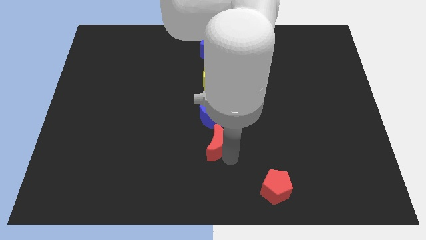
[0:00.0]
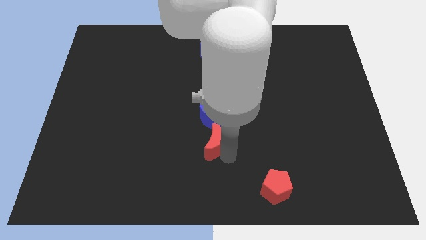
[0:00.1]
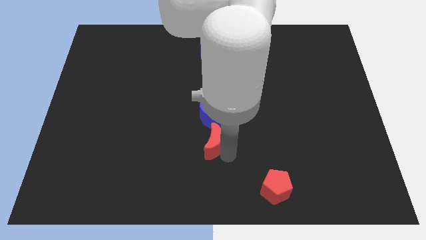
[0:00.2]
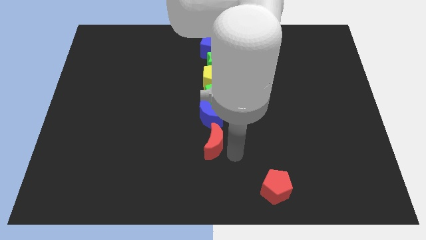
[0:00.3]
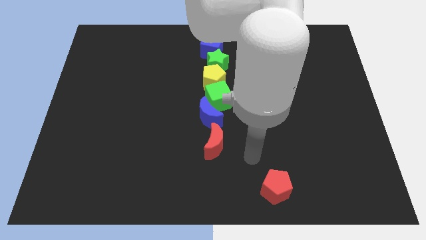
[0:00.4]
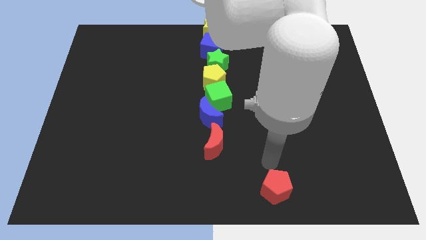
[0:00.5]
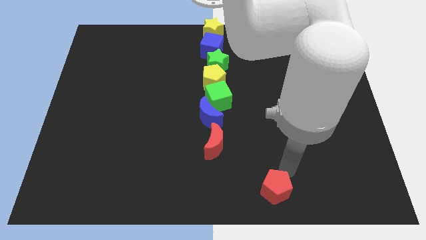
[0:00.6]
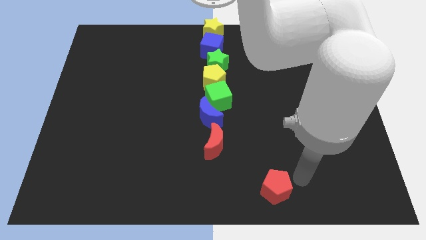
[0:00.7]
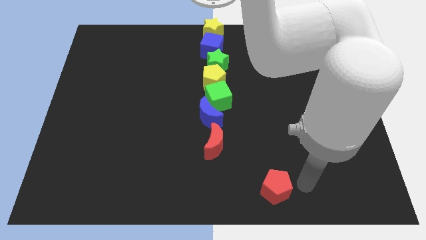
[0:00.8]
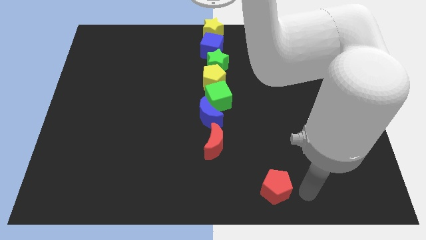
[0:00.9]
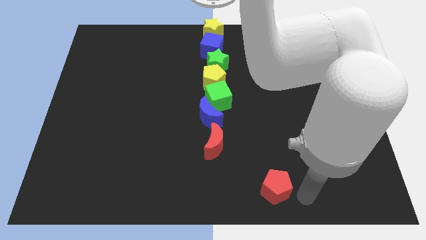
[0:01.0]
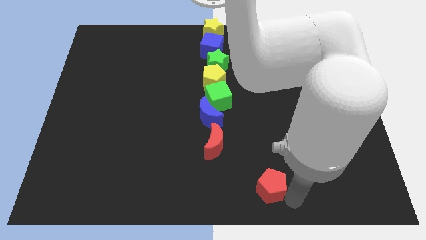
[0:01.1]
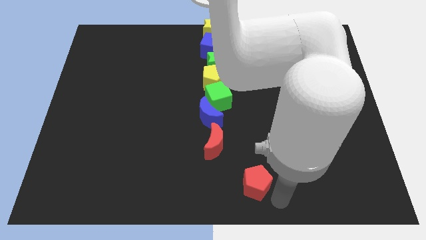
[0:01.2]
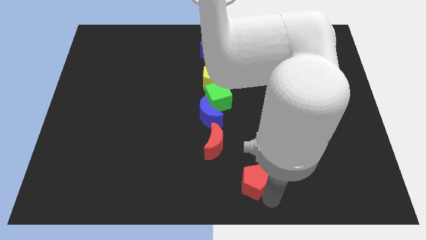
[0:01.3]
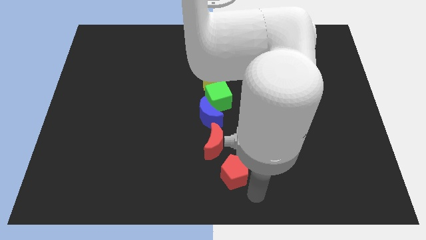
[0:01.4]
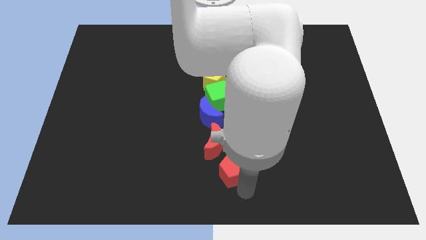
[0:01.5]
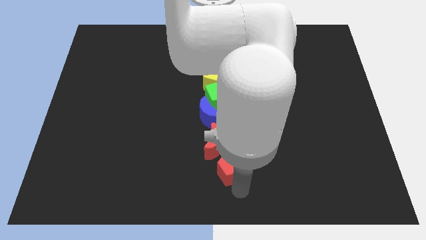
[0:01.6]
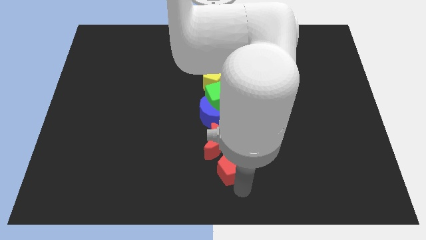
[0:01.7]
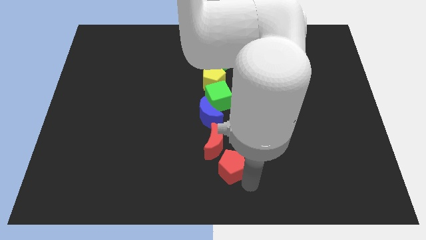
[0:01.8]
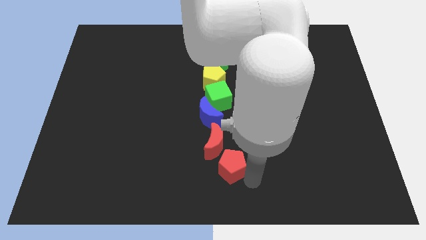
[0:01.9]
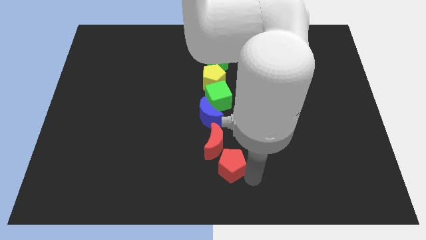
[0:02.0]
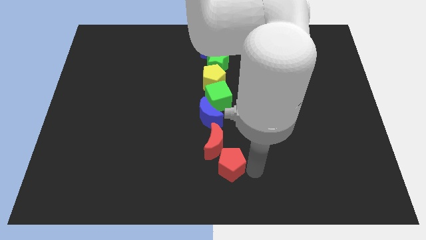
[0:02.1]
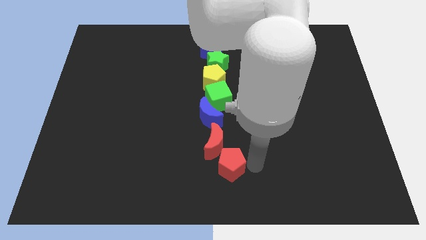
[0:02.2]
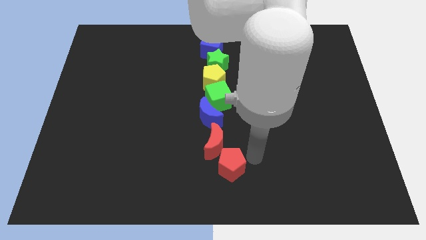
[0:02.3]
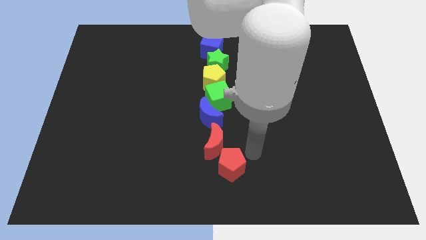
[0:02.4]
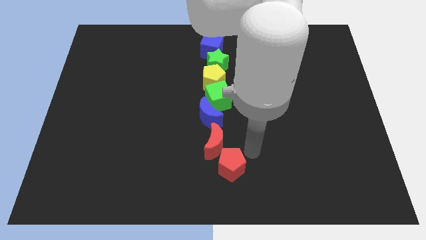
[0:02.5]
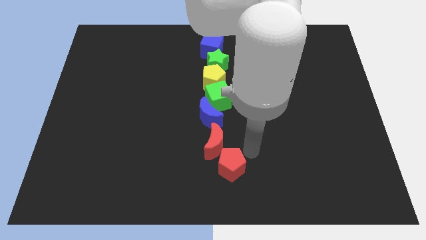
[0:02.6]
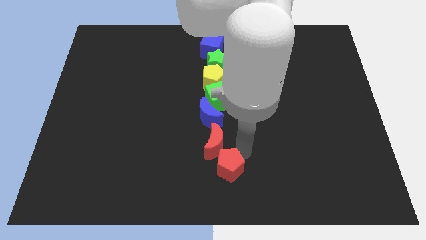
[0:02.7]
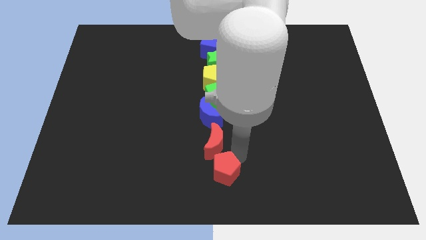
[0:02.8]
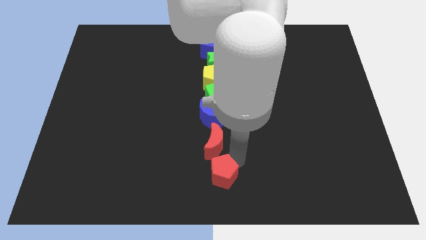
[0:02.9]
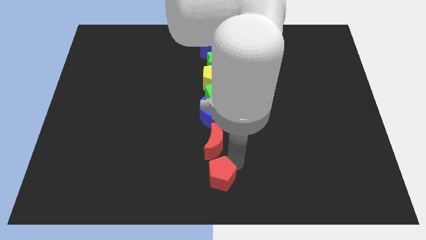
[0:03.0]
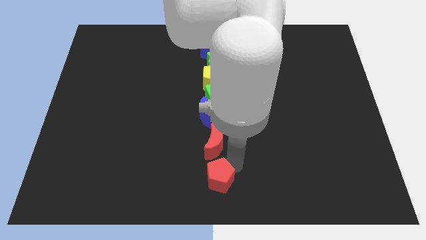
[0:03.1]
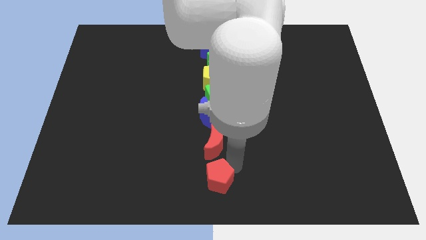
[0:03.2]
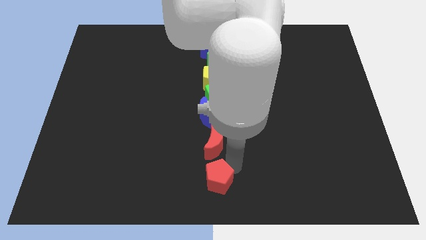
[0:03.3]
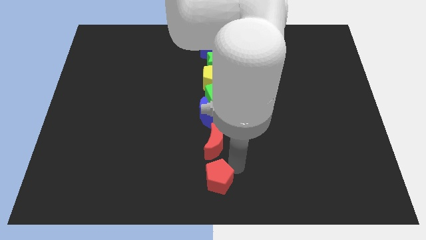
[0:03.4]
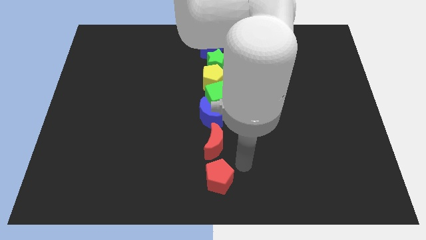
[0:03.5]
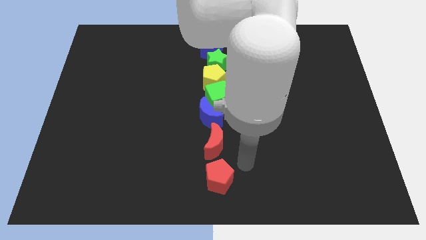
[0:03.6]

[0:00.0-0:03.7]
push red pentagon below red moon

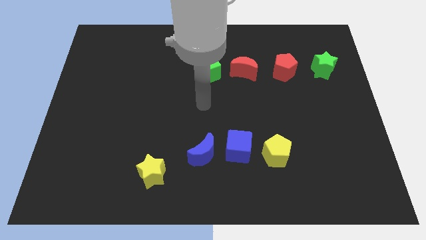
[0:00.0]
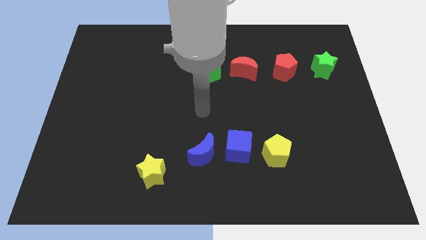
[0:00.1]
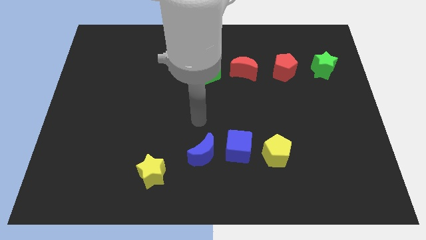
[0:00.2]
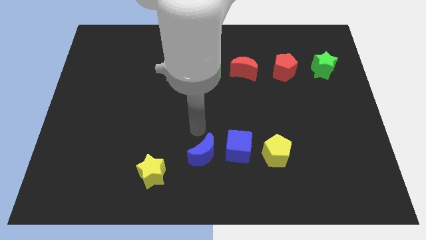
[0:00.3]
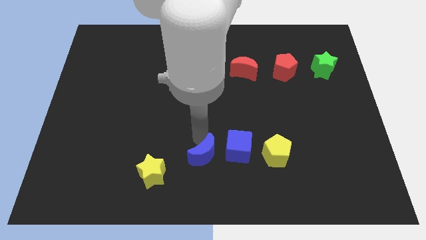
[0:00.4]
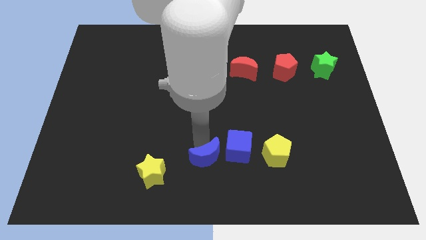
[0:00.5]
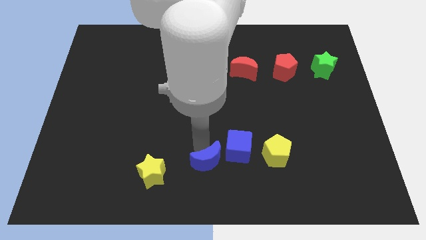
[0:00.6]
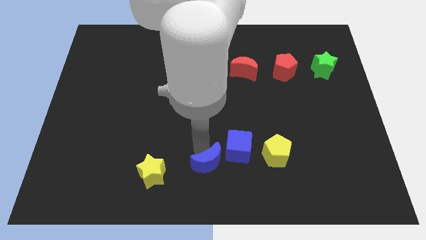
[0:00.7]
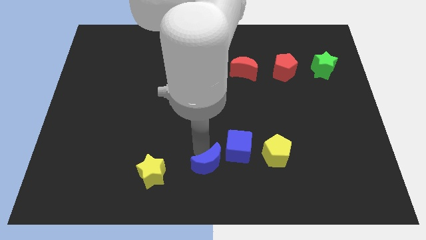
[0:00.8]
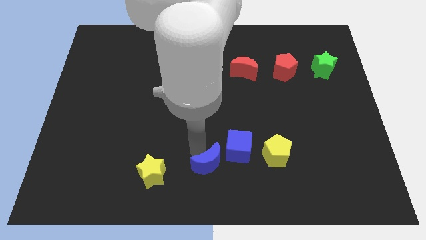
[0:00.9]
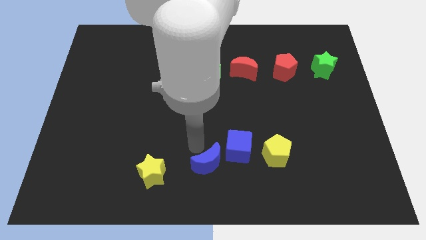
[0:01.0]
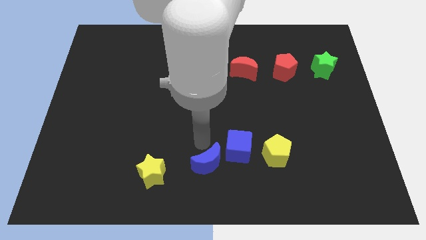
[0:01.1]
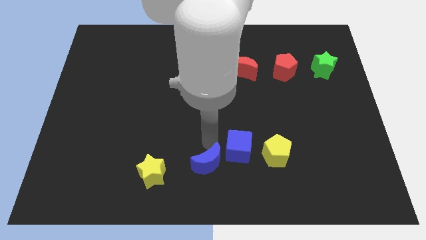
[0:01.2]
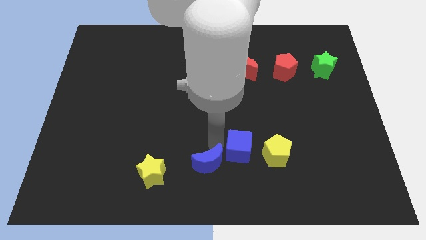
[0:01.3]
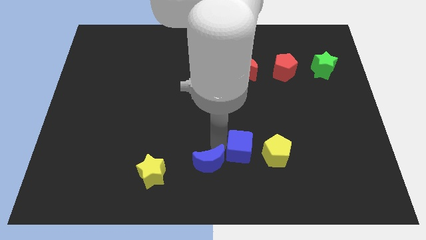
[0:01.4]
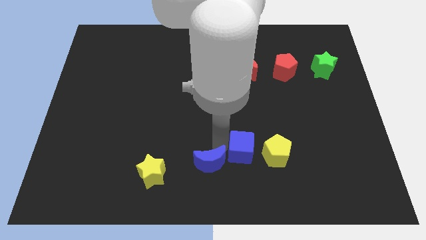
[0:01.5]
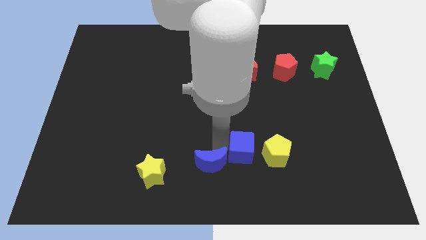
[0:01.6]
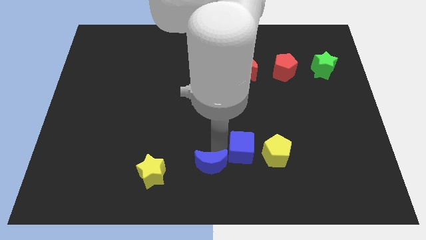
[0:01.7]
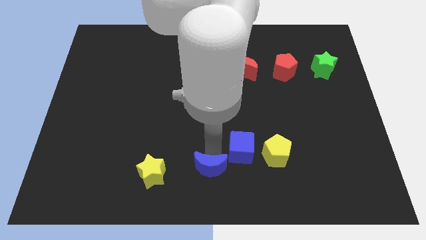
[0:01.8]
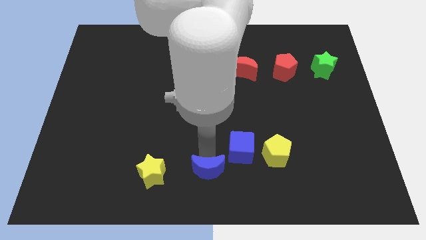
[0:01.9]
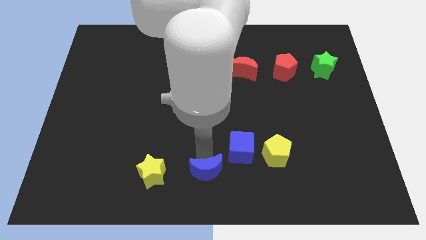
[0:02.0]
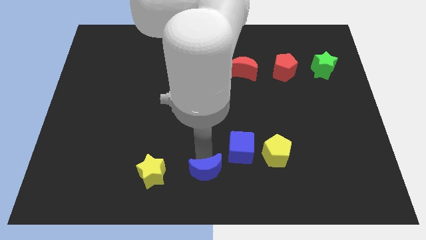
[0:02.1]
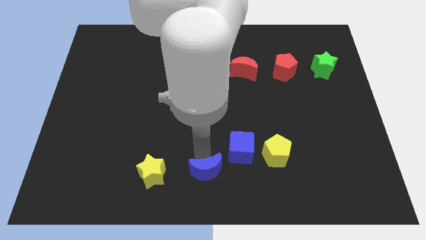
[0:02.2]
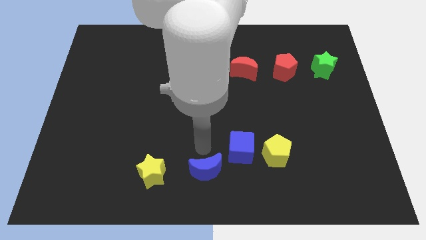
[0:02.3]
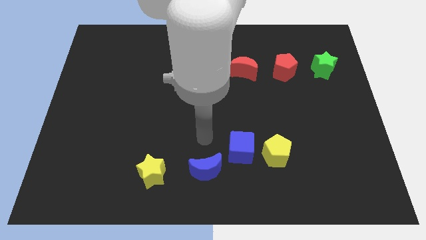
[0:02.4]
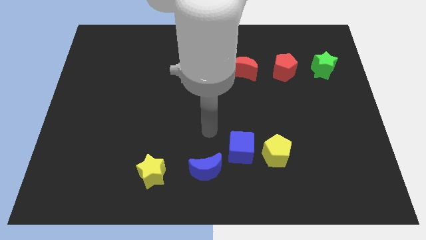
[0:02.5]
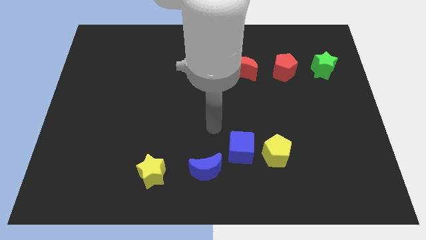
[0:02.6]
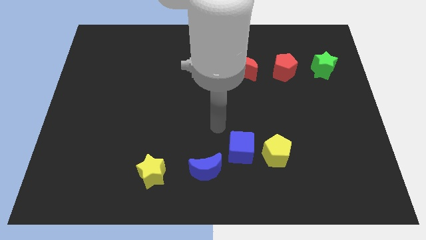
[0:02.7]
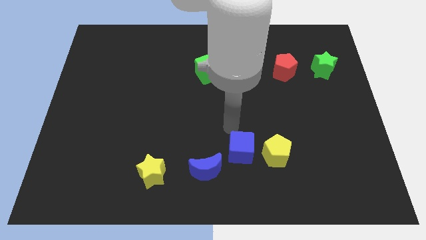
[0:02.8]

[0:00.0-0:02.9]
slide the blue crescent down slightly

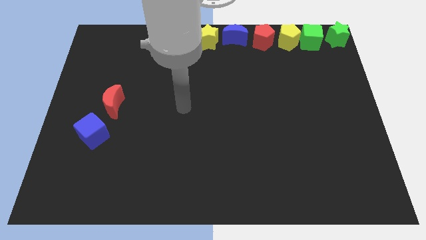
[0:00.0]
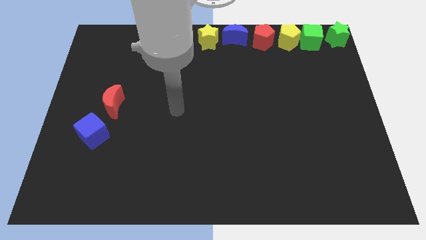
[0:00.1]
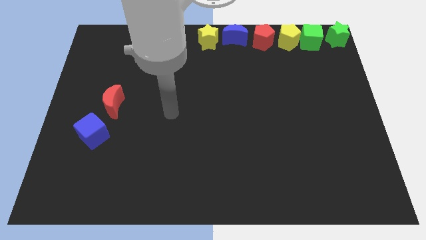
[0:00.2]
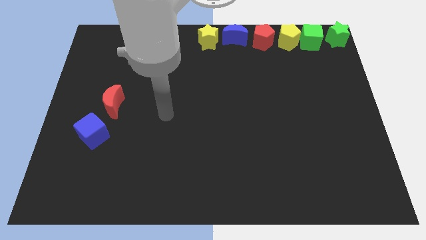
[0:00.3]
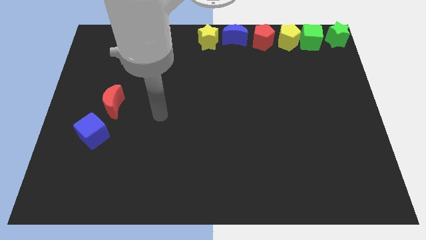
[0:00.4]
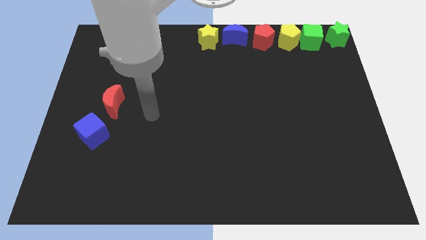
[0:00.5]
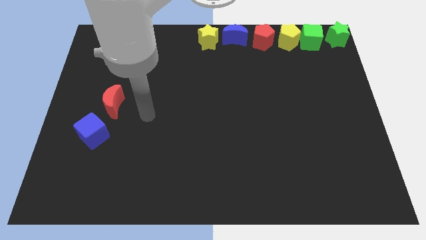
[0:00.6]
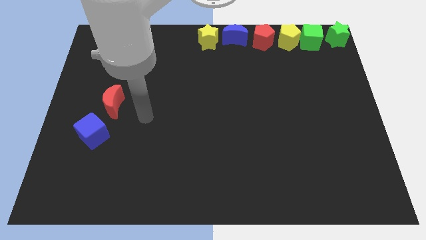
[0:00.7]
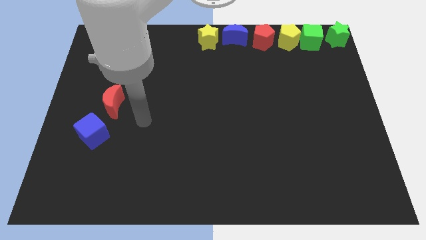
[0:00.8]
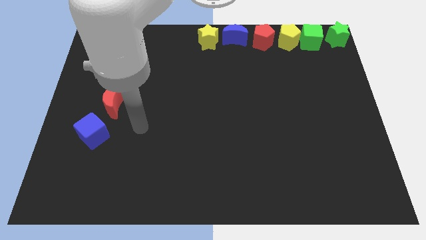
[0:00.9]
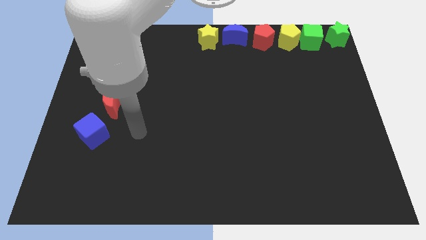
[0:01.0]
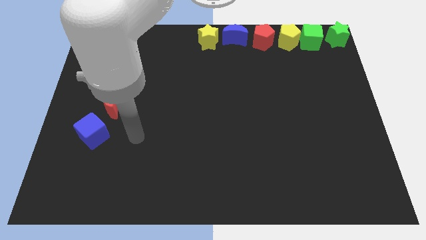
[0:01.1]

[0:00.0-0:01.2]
move the arm parallel to the right side of the blue cube

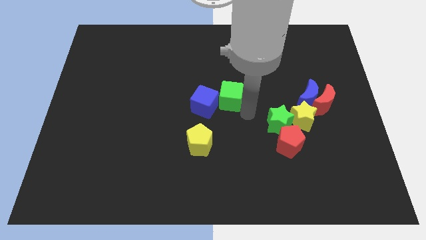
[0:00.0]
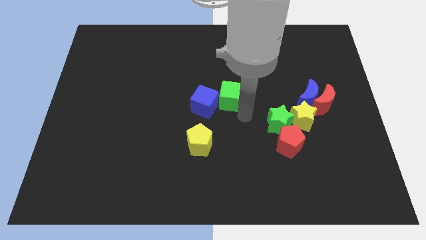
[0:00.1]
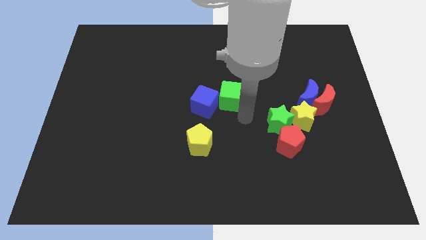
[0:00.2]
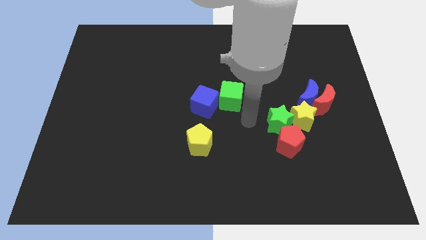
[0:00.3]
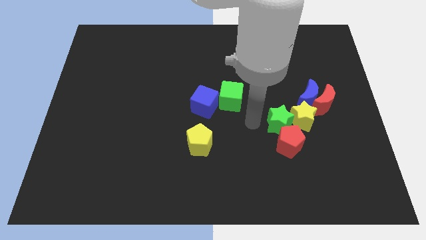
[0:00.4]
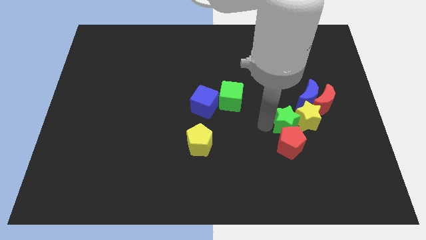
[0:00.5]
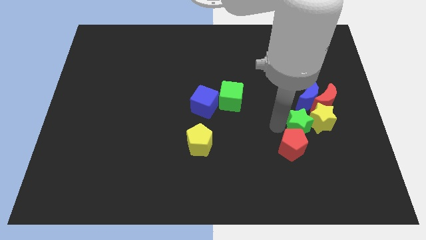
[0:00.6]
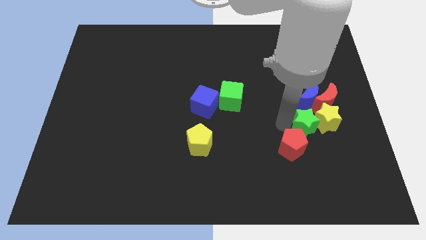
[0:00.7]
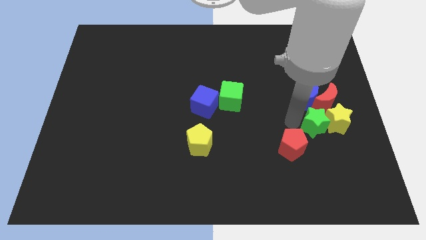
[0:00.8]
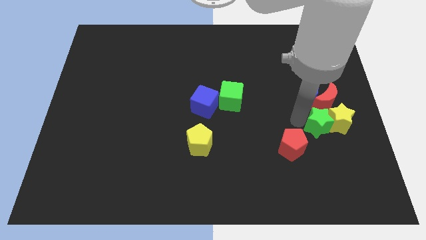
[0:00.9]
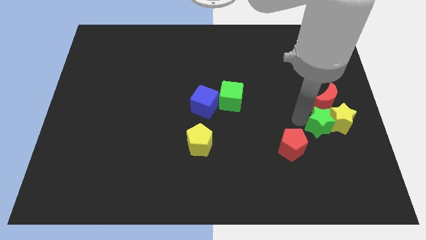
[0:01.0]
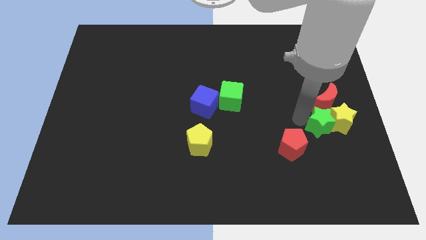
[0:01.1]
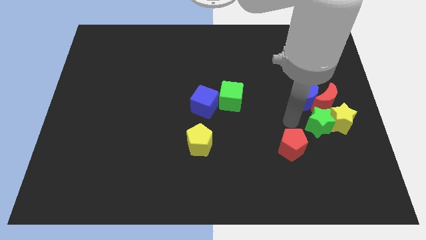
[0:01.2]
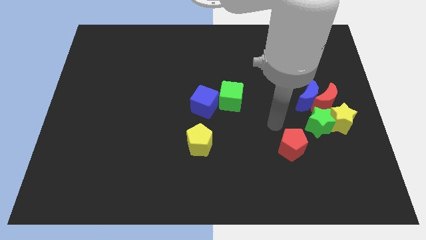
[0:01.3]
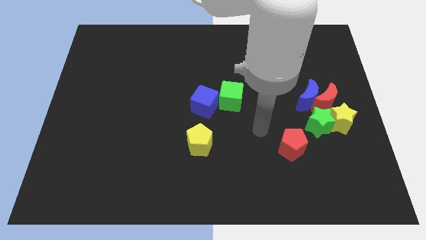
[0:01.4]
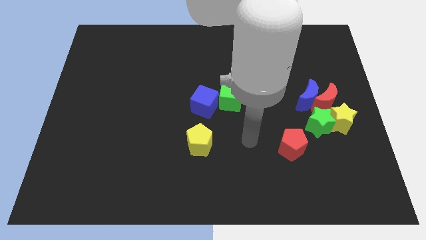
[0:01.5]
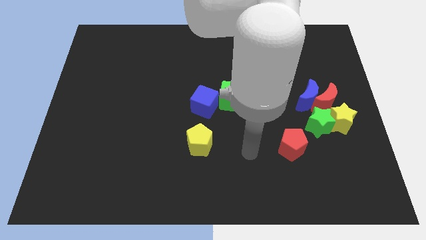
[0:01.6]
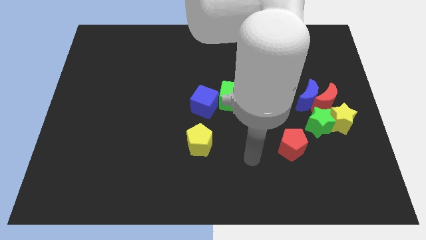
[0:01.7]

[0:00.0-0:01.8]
put the arm in between the yellow pentagon and red pentagon
